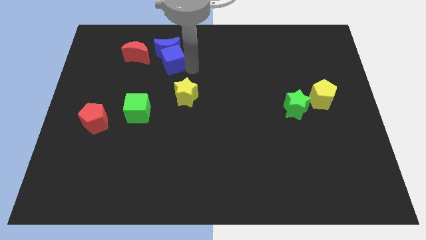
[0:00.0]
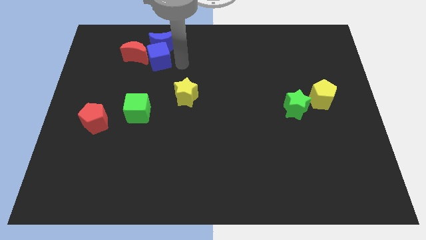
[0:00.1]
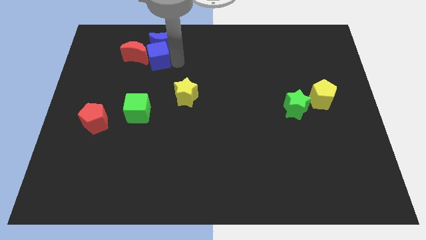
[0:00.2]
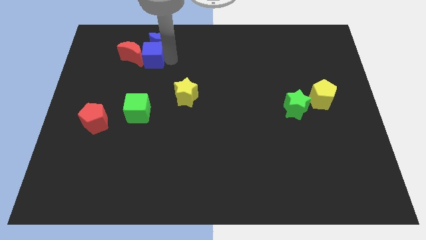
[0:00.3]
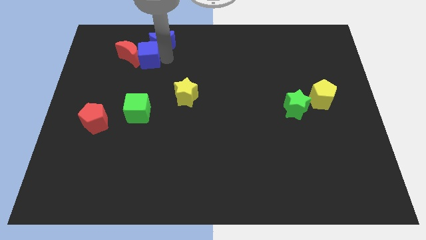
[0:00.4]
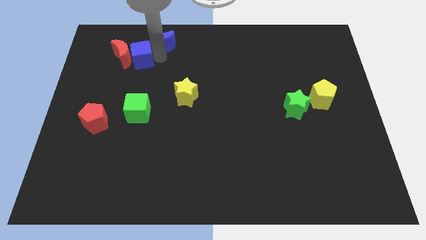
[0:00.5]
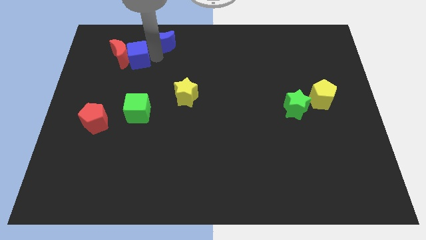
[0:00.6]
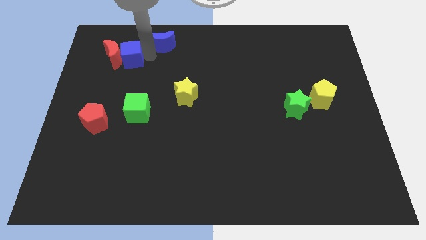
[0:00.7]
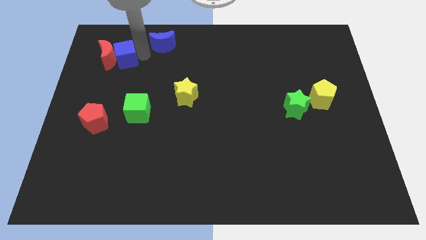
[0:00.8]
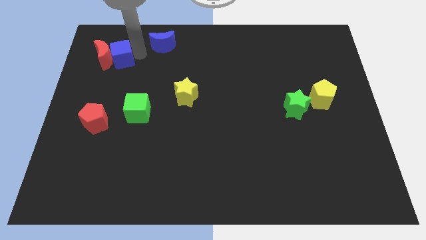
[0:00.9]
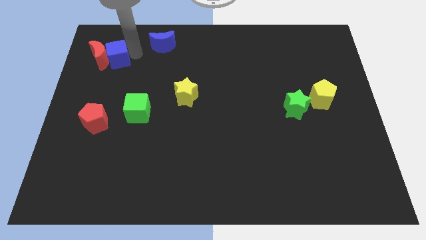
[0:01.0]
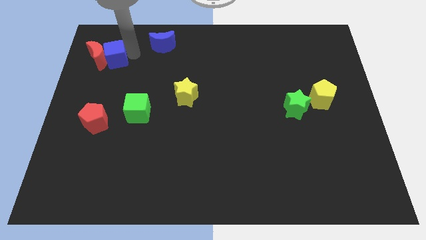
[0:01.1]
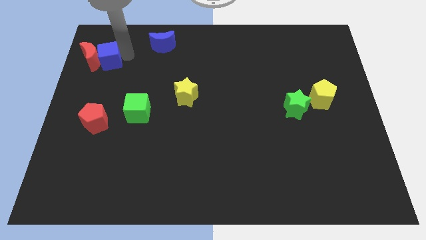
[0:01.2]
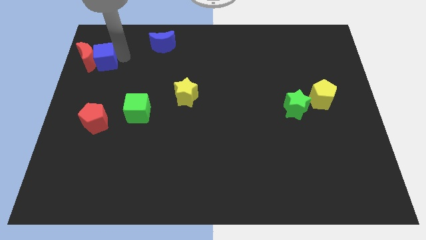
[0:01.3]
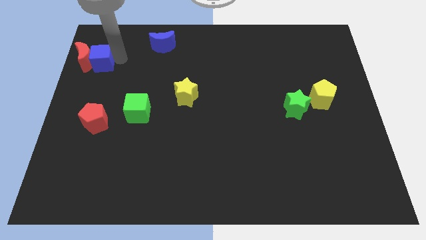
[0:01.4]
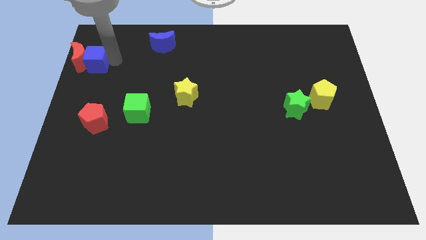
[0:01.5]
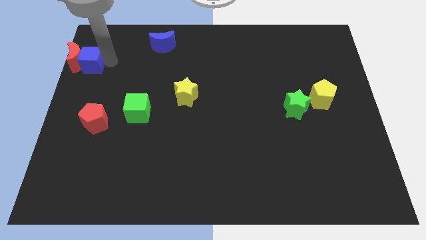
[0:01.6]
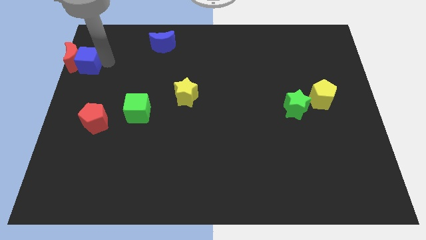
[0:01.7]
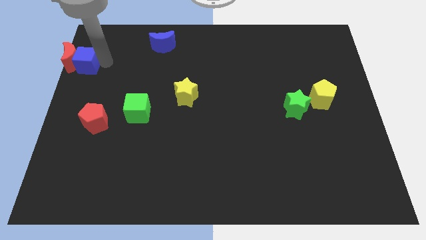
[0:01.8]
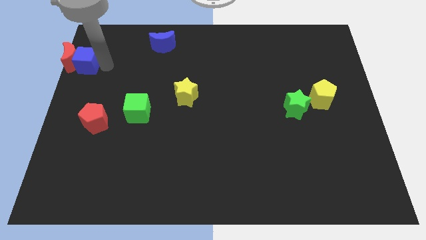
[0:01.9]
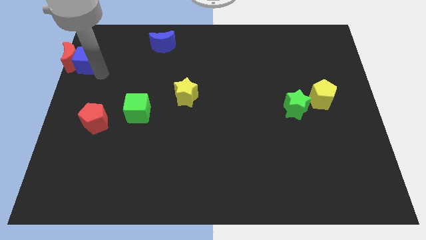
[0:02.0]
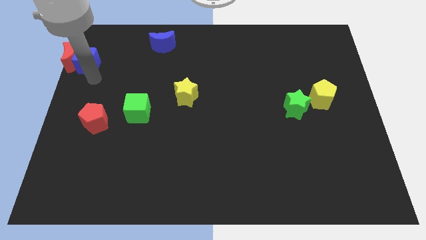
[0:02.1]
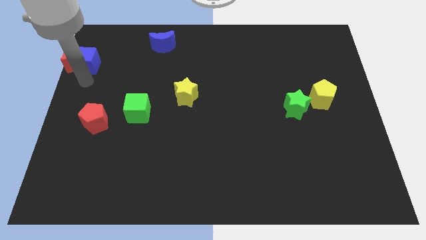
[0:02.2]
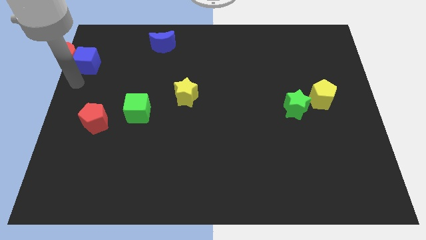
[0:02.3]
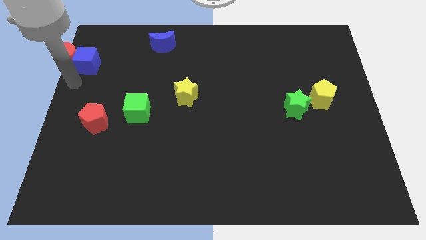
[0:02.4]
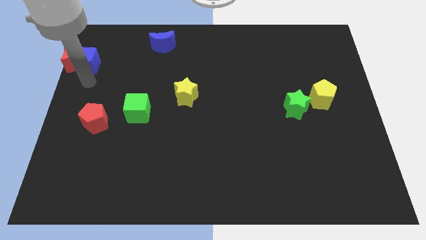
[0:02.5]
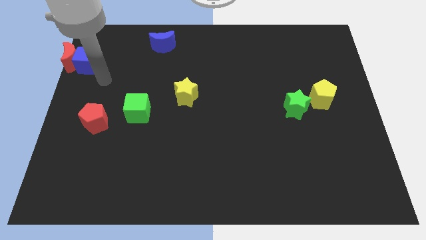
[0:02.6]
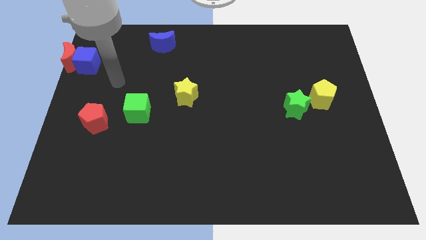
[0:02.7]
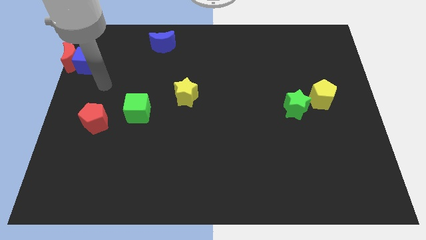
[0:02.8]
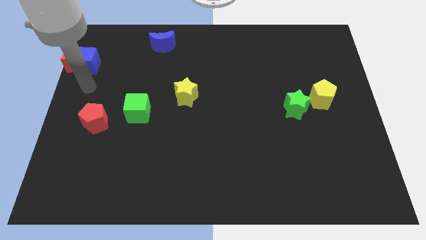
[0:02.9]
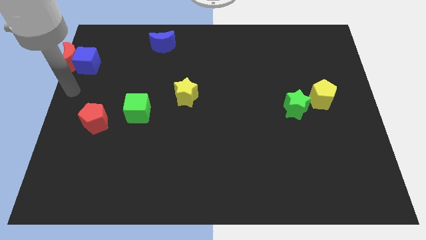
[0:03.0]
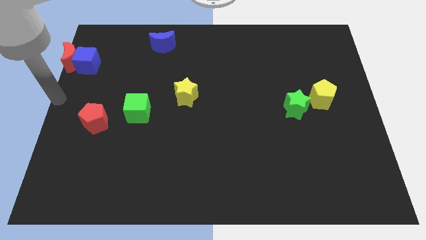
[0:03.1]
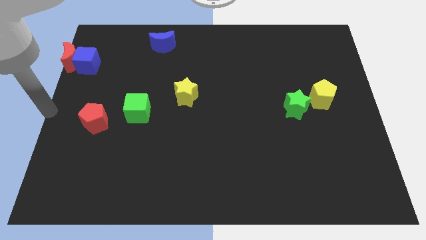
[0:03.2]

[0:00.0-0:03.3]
push the blue cube into the red moon

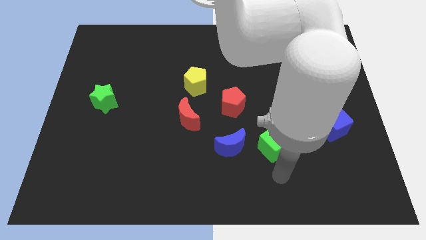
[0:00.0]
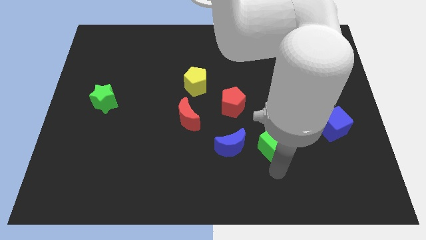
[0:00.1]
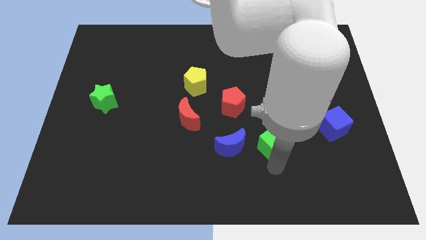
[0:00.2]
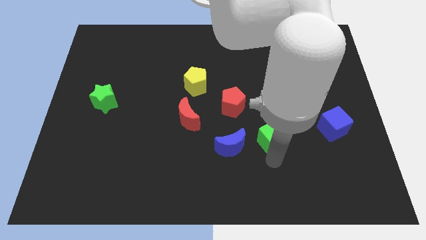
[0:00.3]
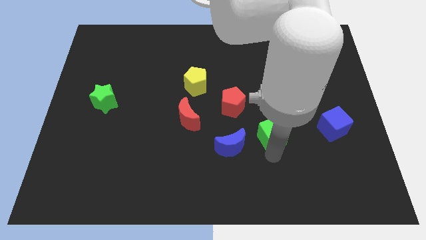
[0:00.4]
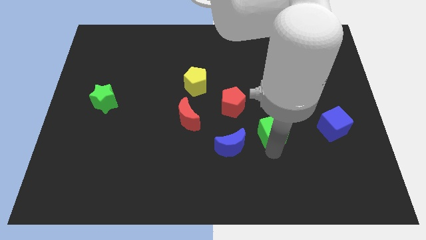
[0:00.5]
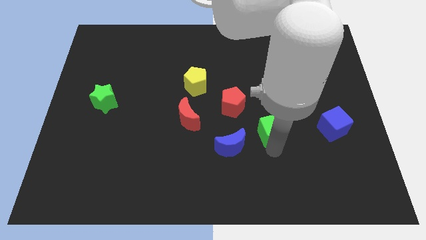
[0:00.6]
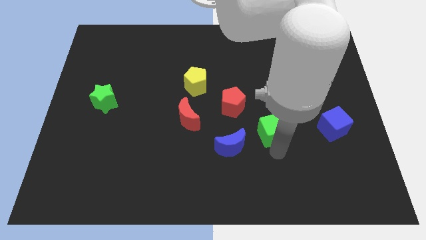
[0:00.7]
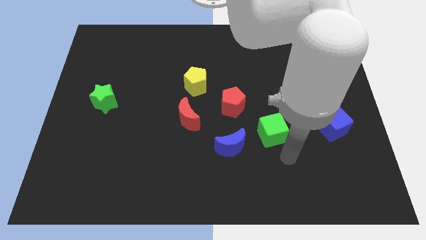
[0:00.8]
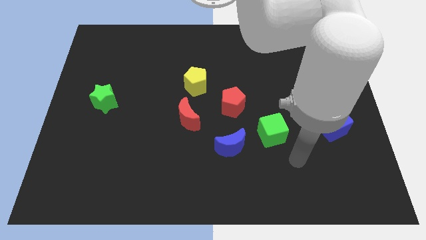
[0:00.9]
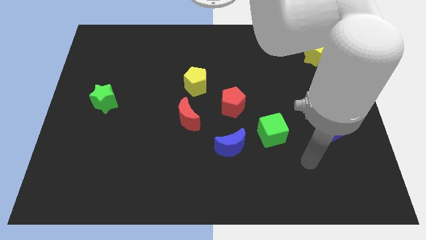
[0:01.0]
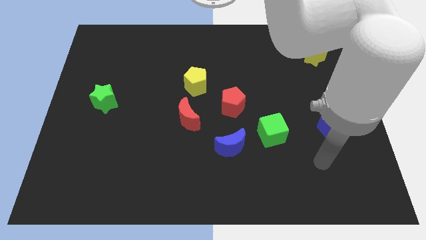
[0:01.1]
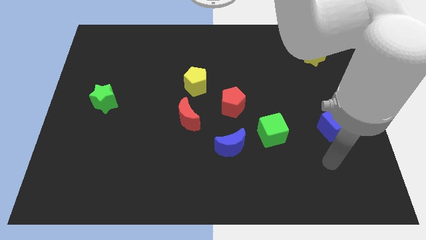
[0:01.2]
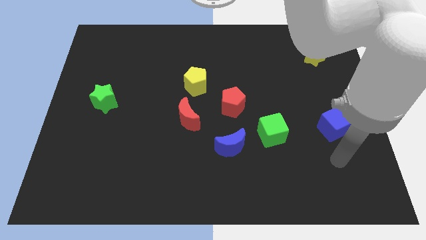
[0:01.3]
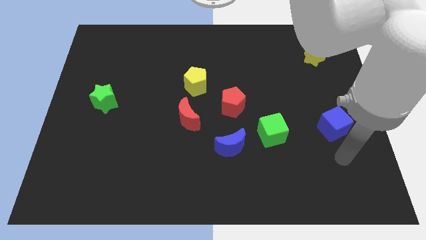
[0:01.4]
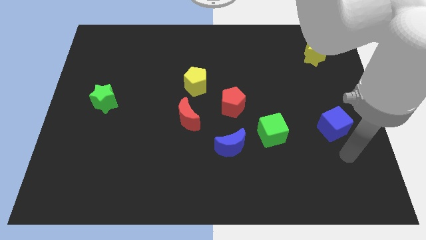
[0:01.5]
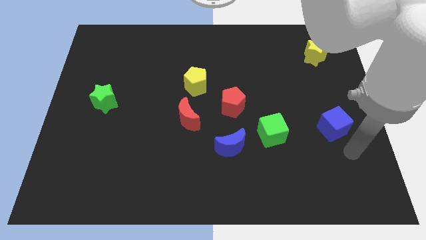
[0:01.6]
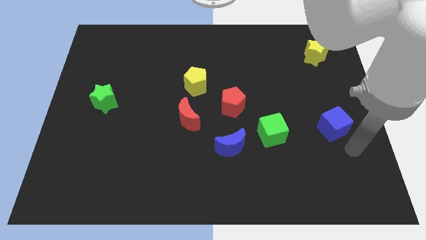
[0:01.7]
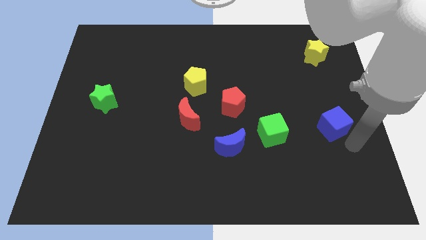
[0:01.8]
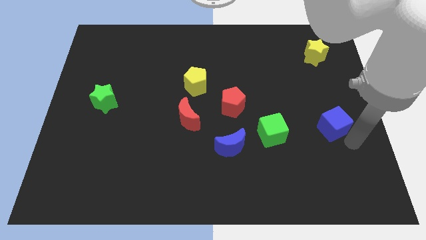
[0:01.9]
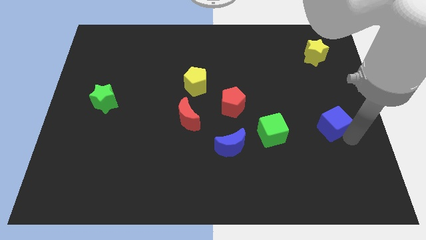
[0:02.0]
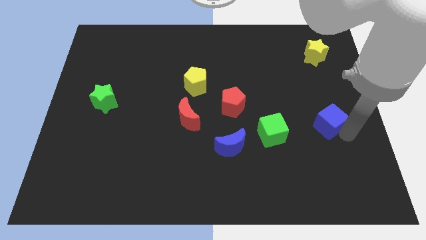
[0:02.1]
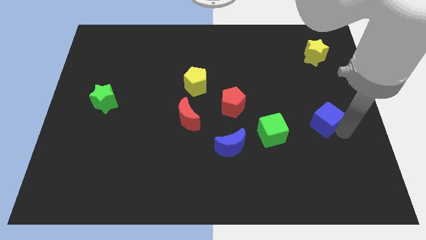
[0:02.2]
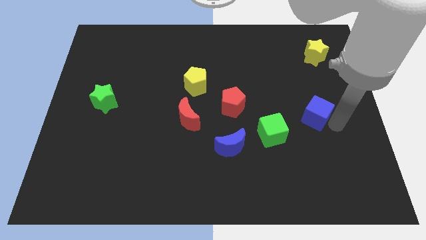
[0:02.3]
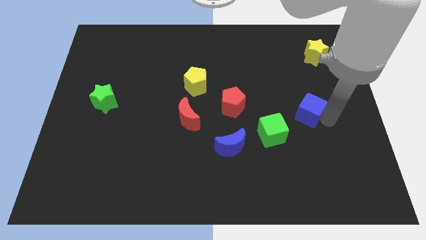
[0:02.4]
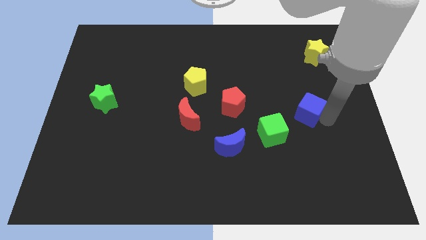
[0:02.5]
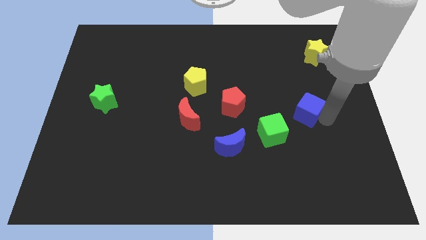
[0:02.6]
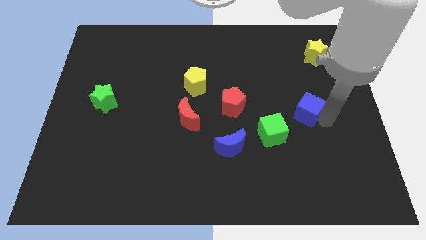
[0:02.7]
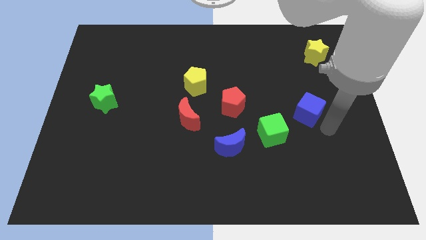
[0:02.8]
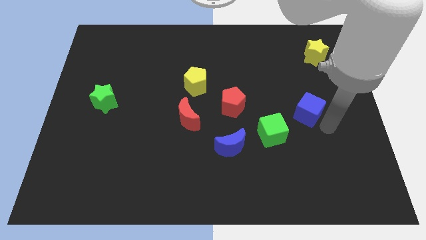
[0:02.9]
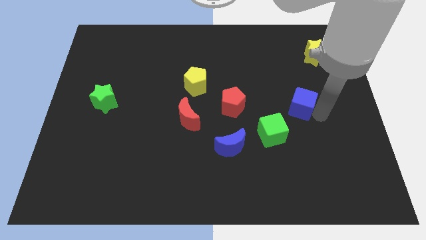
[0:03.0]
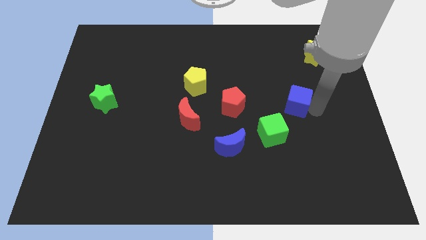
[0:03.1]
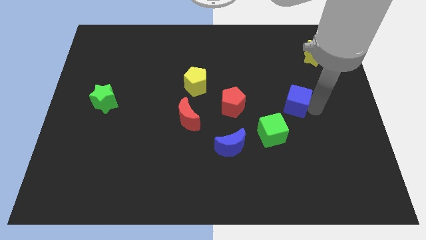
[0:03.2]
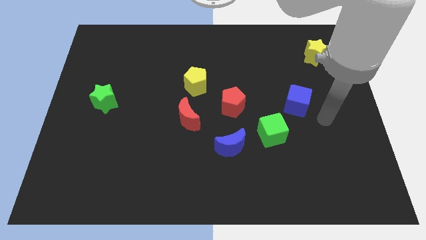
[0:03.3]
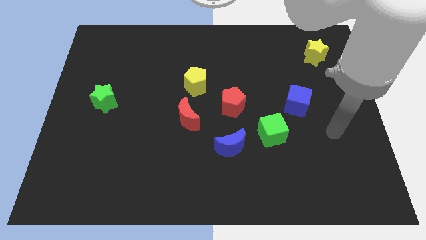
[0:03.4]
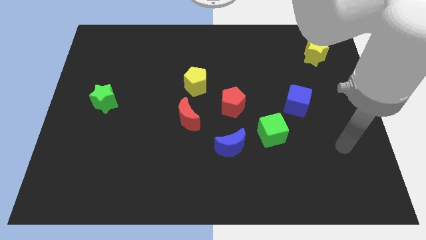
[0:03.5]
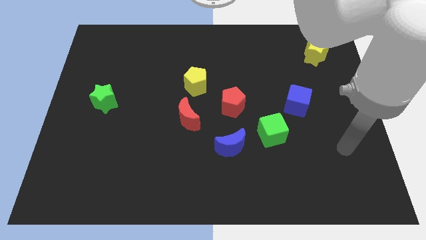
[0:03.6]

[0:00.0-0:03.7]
move the green cube diagonally to the bottom right of the red pentagon

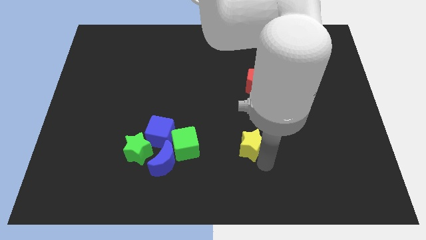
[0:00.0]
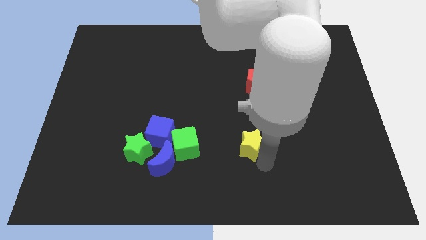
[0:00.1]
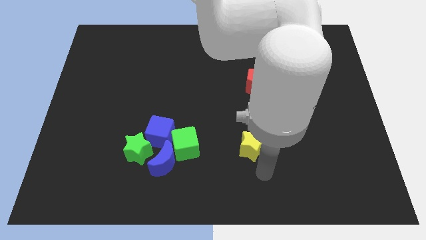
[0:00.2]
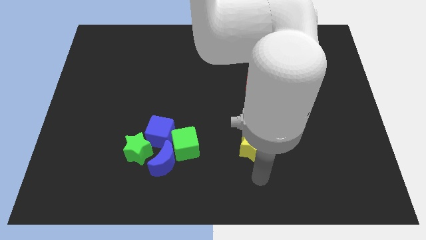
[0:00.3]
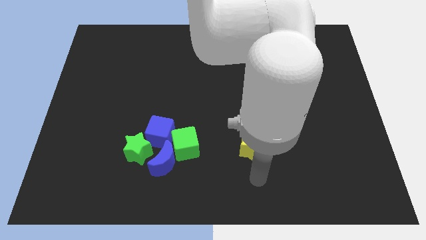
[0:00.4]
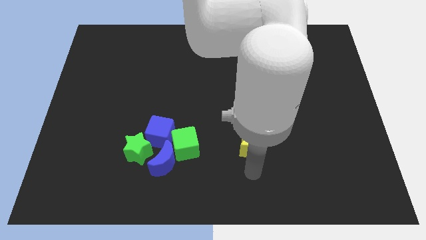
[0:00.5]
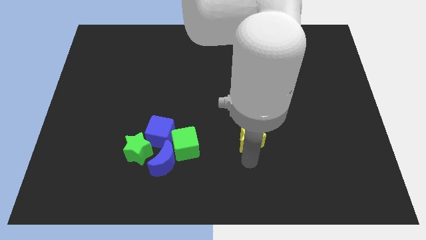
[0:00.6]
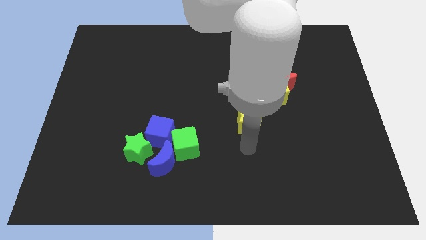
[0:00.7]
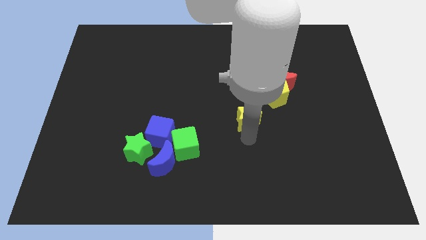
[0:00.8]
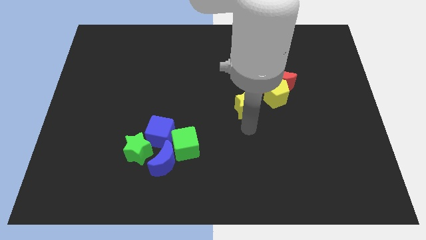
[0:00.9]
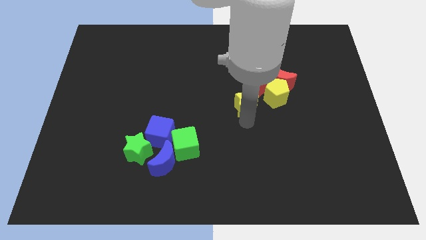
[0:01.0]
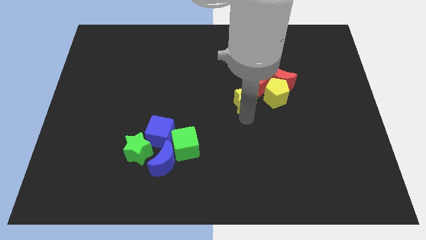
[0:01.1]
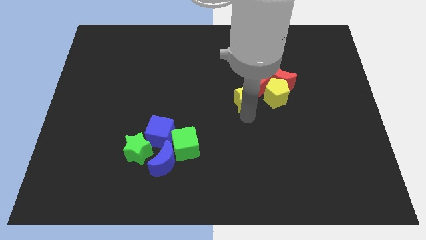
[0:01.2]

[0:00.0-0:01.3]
move the yellow star to the bottom of the red crescent

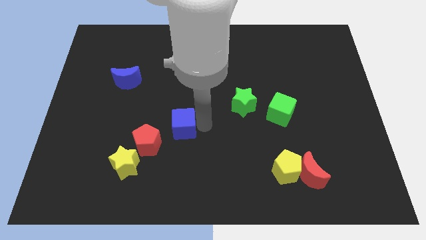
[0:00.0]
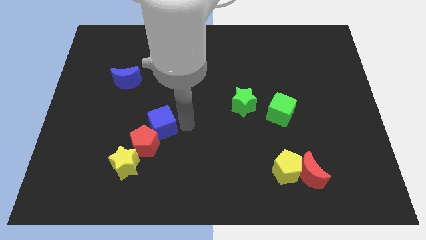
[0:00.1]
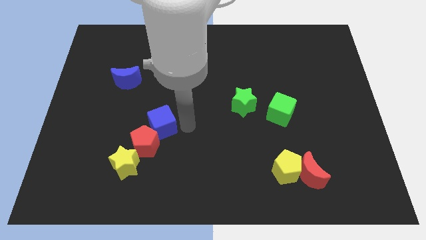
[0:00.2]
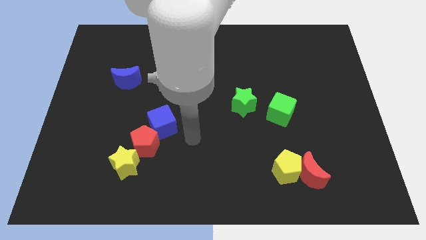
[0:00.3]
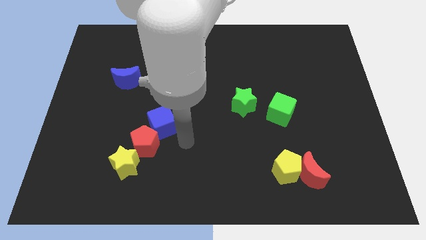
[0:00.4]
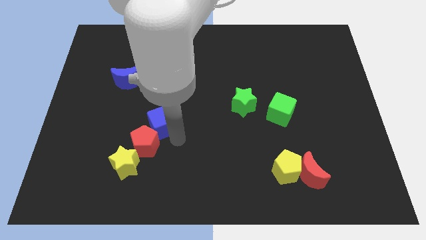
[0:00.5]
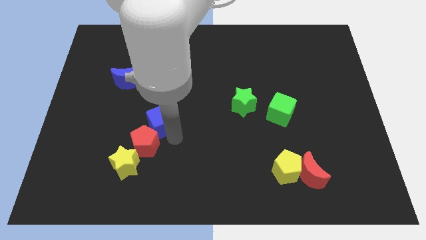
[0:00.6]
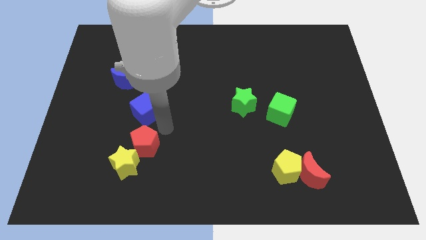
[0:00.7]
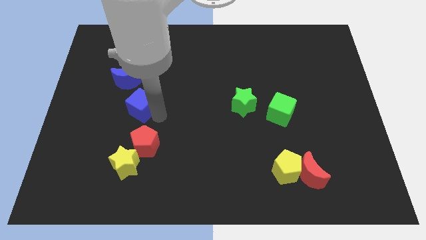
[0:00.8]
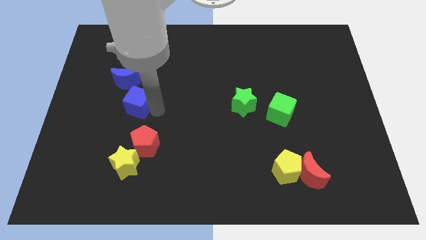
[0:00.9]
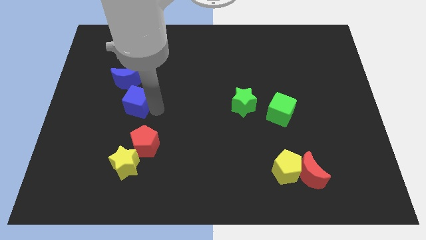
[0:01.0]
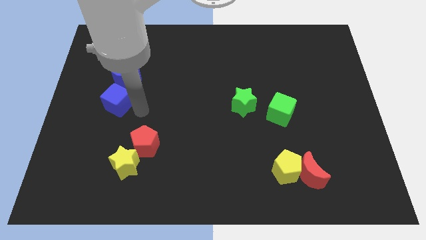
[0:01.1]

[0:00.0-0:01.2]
place the blue cube in between the blue moon and red pentagon
